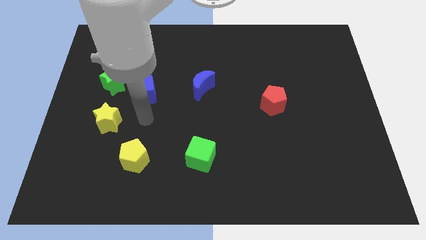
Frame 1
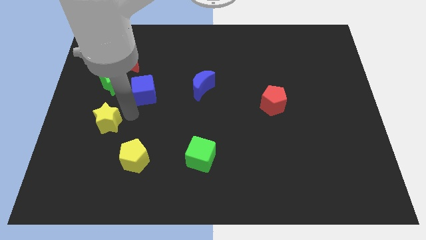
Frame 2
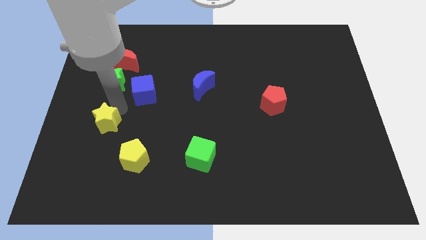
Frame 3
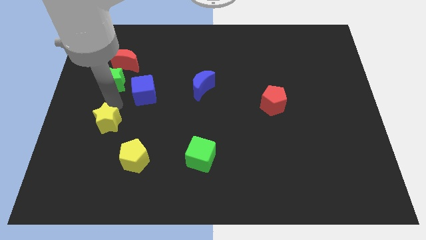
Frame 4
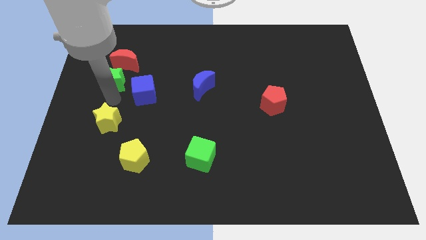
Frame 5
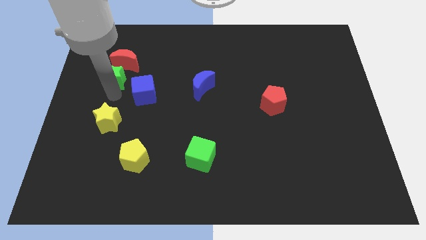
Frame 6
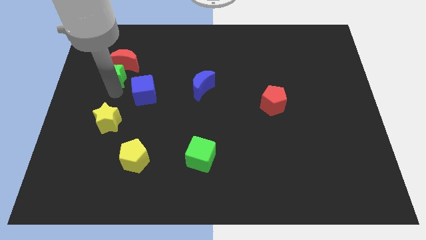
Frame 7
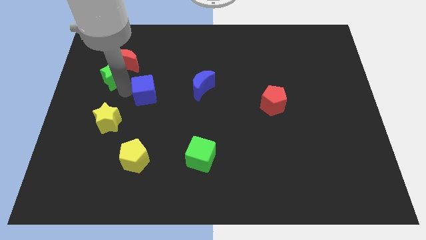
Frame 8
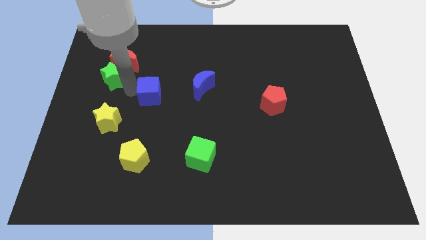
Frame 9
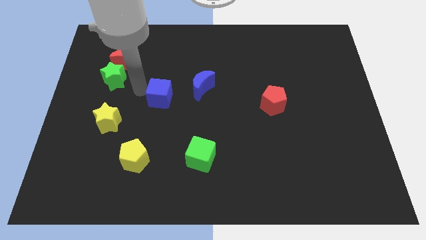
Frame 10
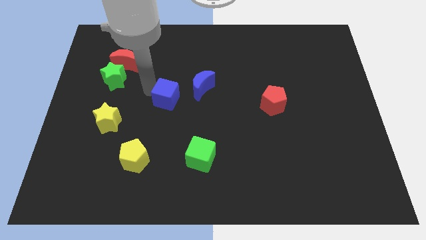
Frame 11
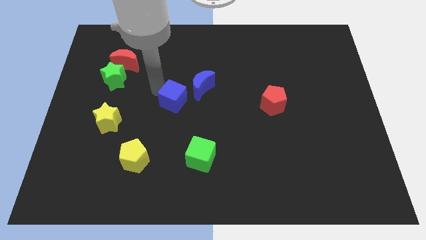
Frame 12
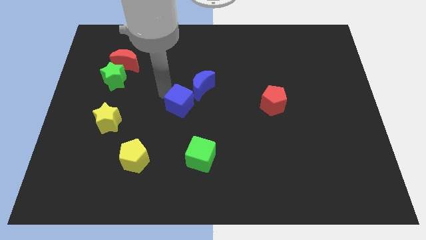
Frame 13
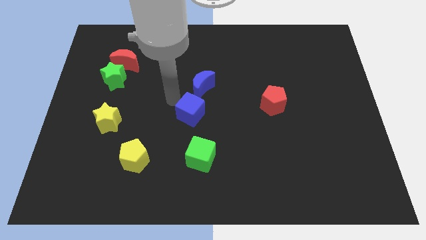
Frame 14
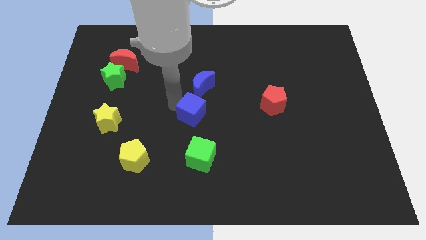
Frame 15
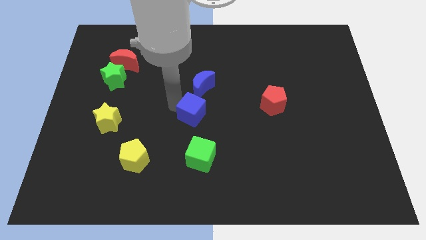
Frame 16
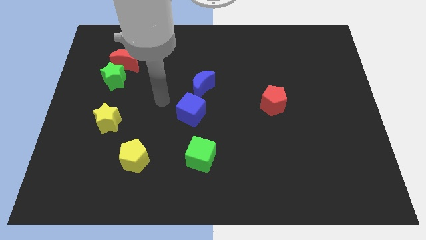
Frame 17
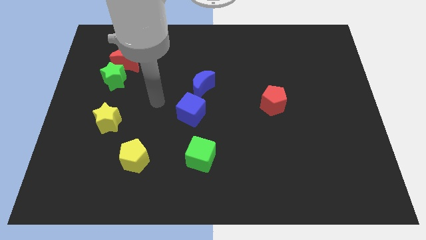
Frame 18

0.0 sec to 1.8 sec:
place the blue cube above the green cube

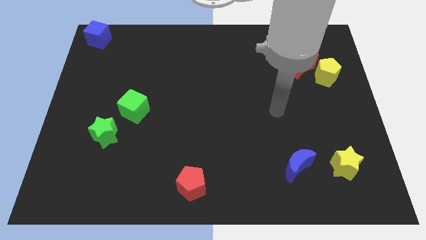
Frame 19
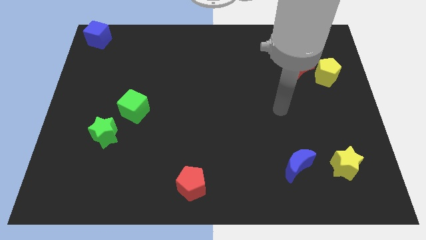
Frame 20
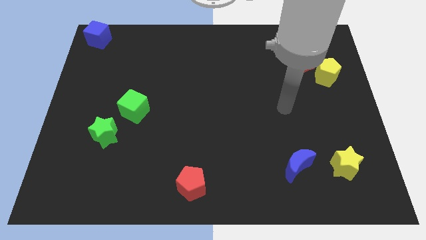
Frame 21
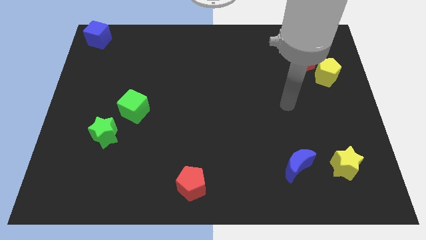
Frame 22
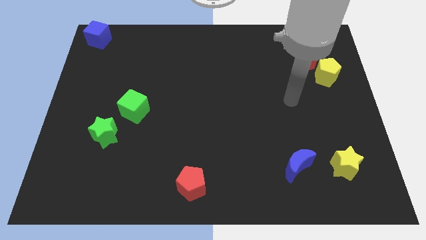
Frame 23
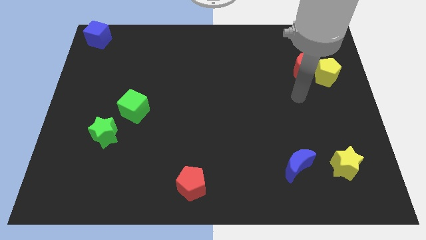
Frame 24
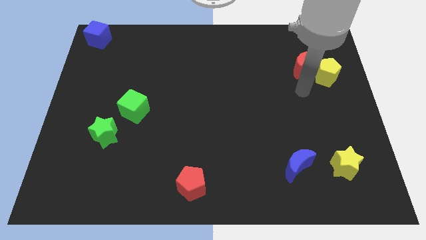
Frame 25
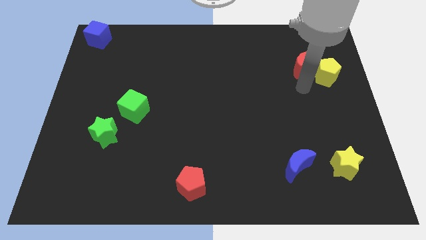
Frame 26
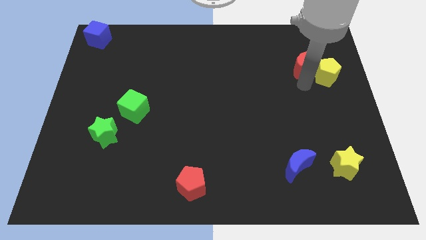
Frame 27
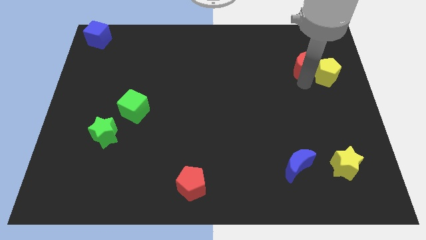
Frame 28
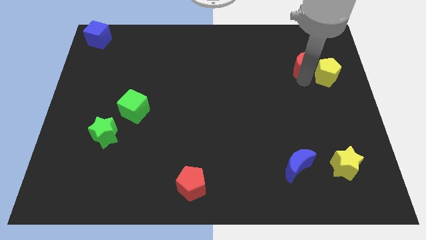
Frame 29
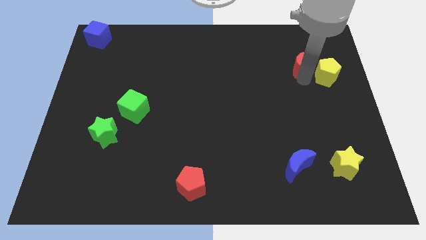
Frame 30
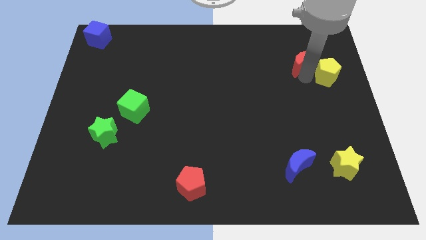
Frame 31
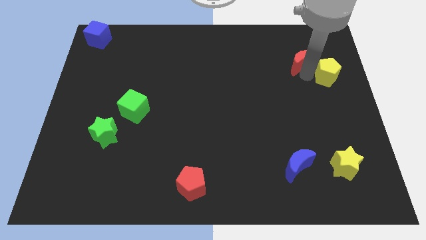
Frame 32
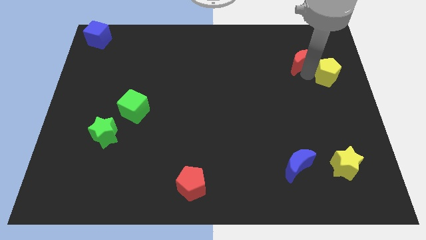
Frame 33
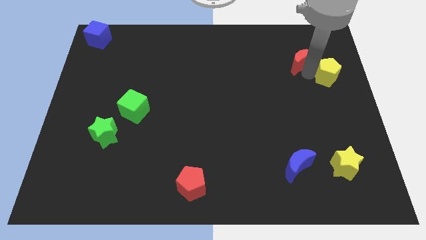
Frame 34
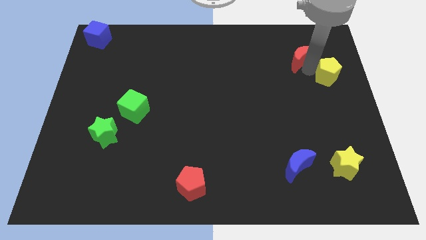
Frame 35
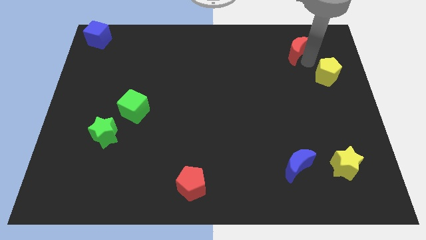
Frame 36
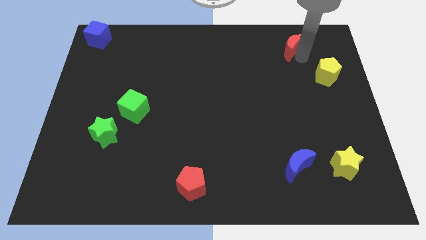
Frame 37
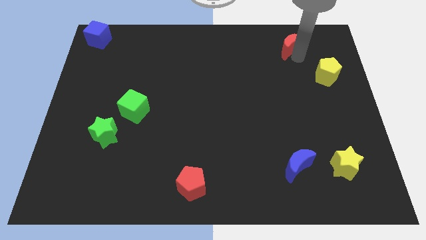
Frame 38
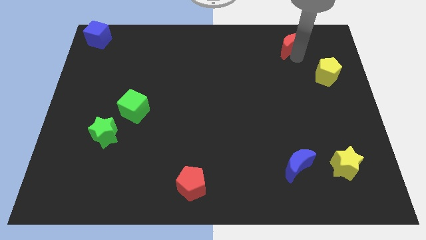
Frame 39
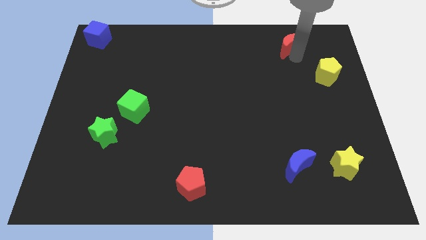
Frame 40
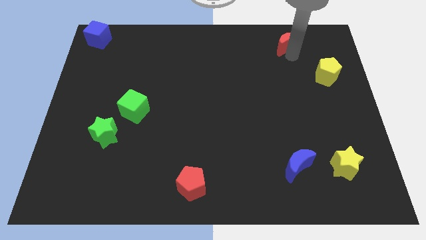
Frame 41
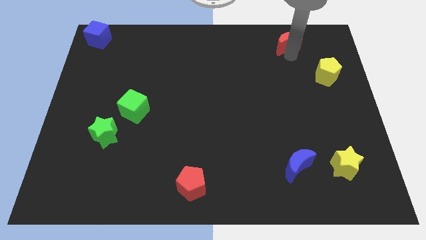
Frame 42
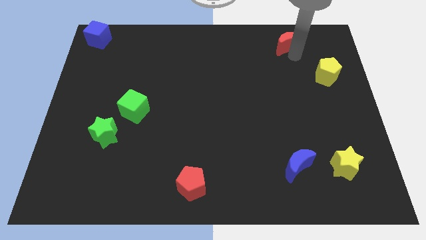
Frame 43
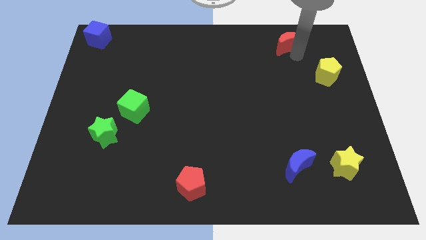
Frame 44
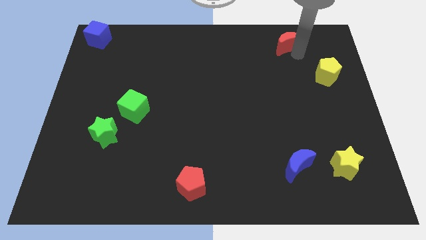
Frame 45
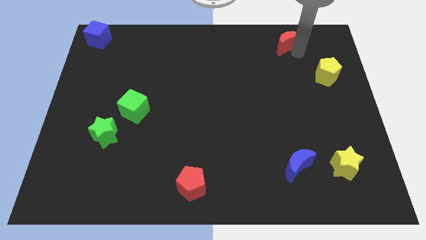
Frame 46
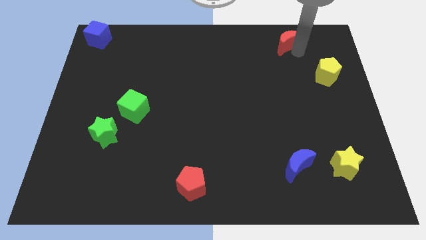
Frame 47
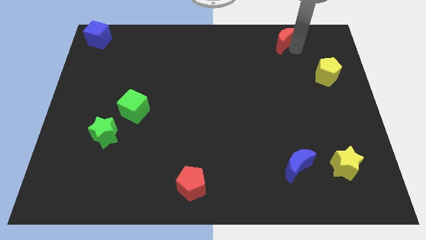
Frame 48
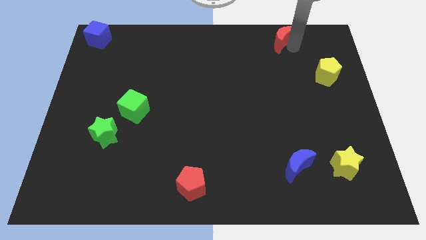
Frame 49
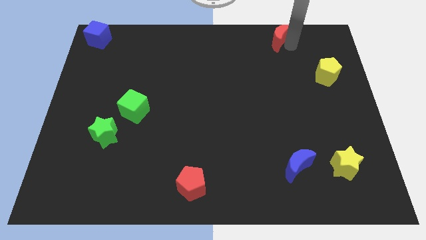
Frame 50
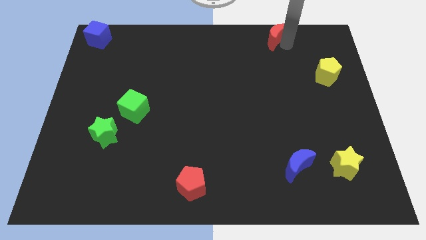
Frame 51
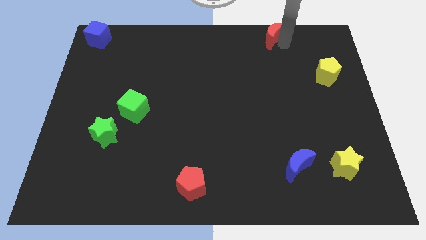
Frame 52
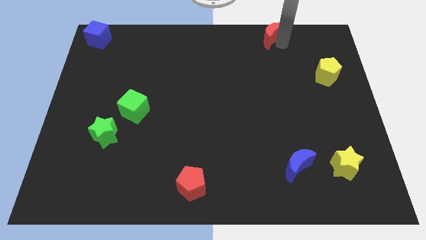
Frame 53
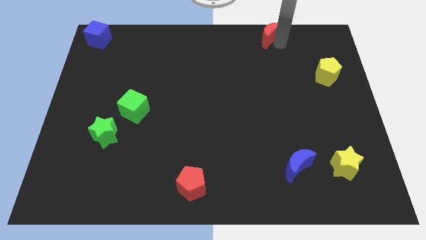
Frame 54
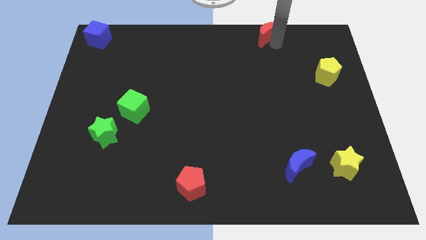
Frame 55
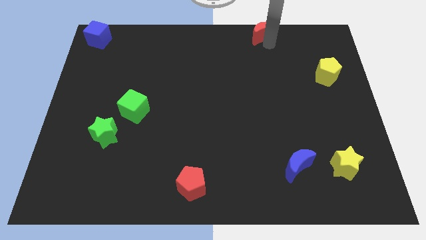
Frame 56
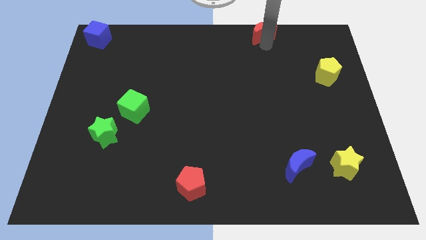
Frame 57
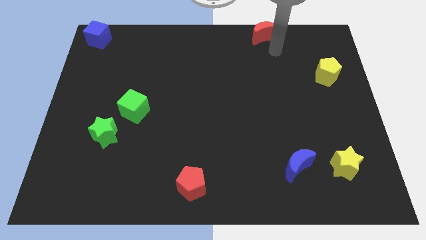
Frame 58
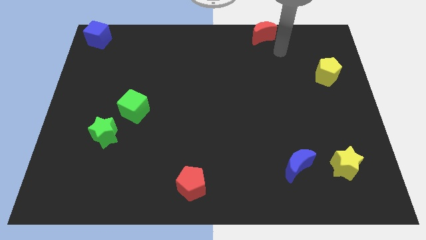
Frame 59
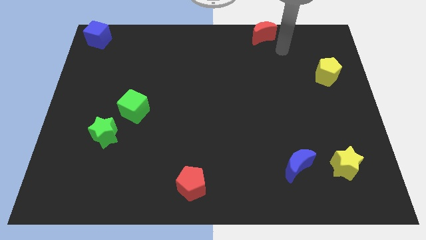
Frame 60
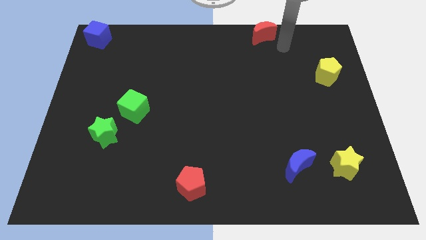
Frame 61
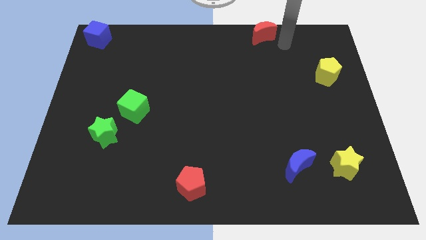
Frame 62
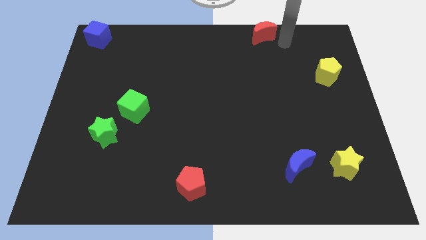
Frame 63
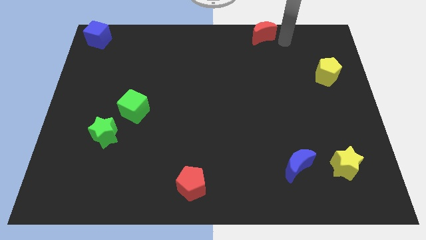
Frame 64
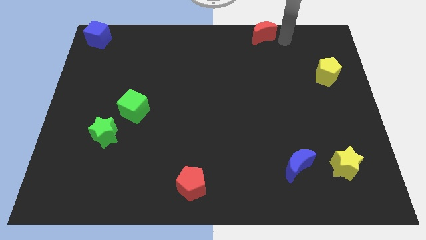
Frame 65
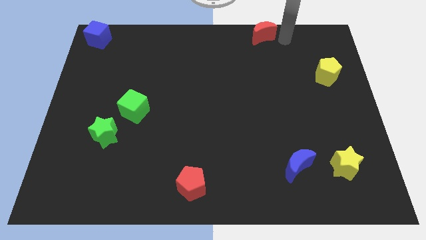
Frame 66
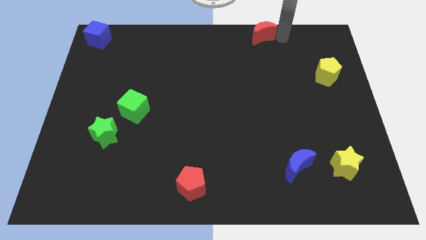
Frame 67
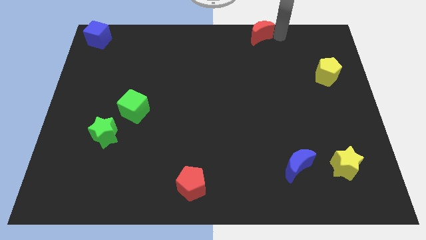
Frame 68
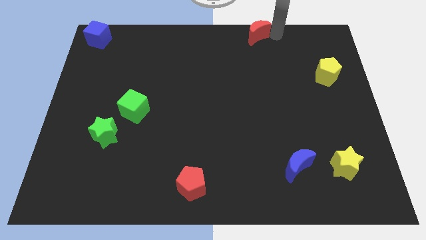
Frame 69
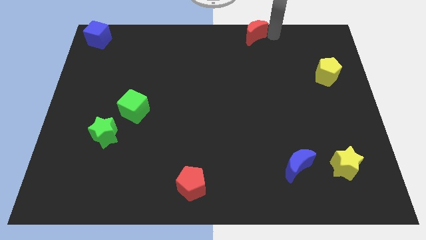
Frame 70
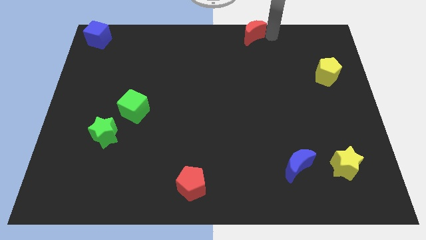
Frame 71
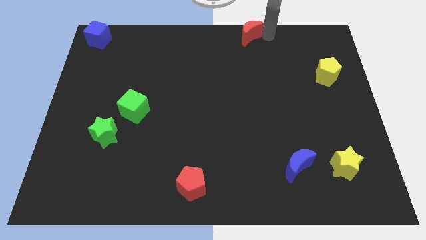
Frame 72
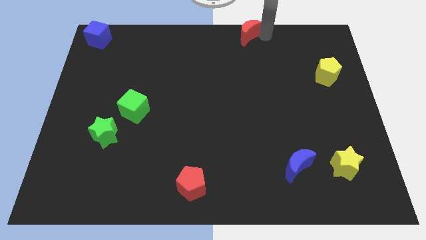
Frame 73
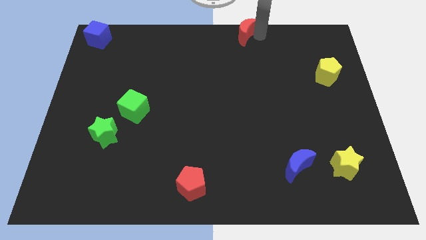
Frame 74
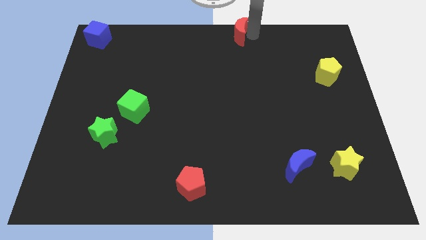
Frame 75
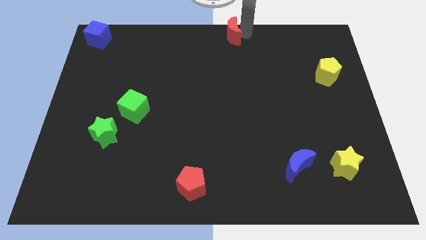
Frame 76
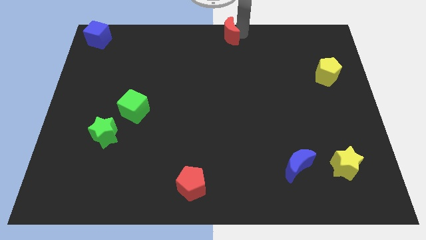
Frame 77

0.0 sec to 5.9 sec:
separate red moon from the yellow pentagon

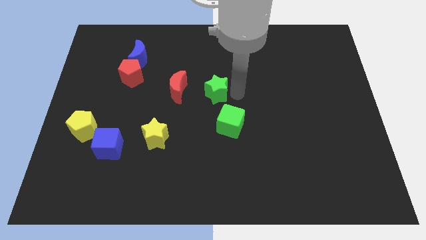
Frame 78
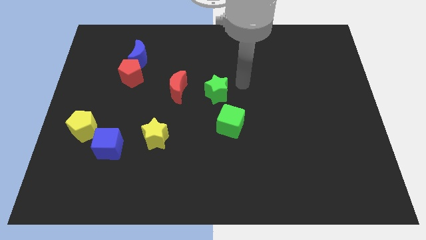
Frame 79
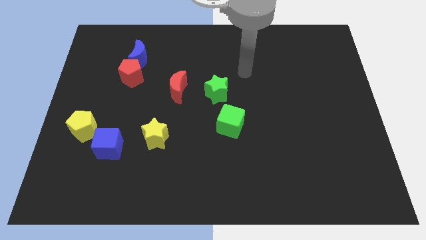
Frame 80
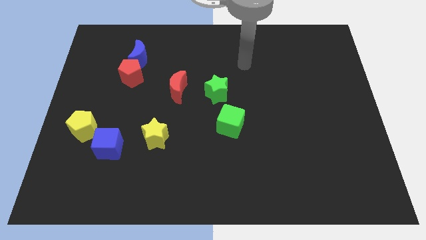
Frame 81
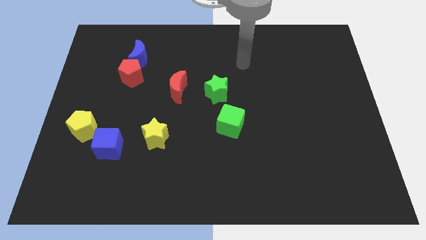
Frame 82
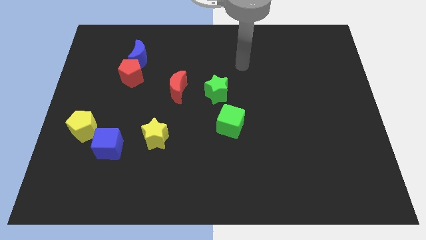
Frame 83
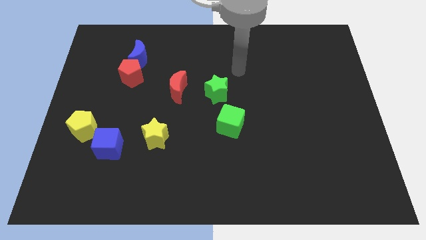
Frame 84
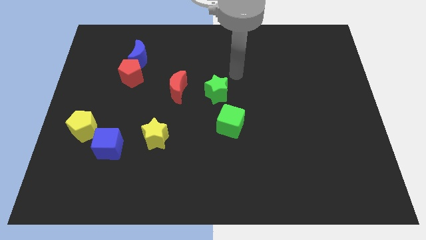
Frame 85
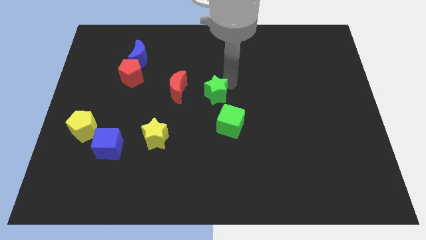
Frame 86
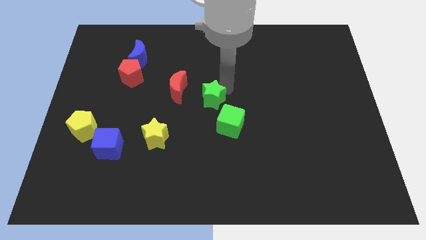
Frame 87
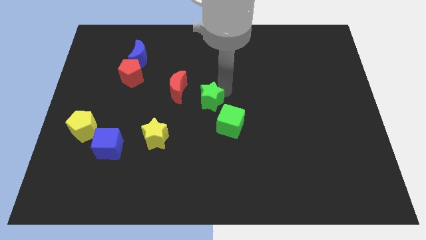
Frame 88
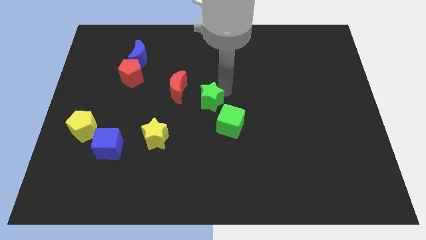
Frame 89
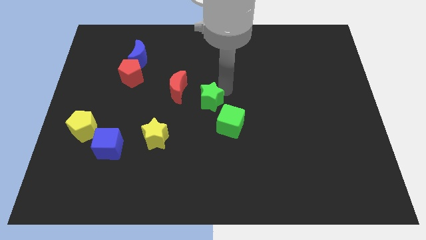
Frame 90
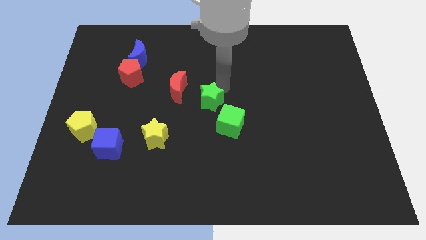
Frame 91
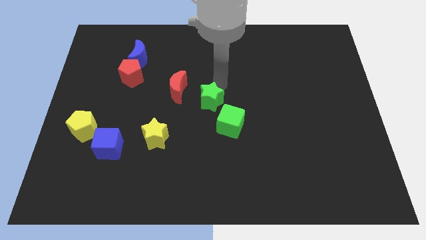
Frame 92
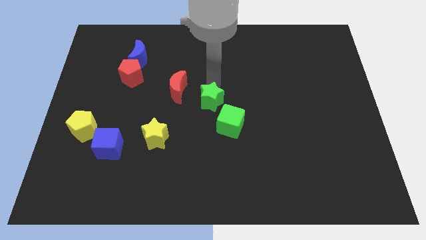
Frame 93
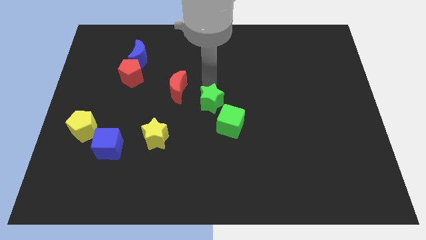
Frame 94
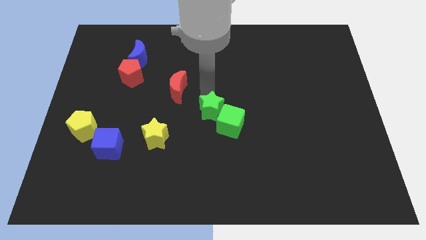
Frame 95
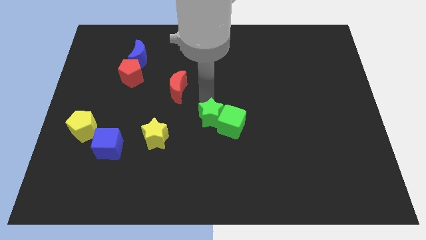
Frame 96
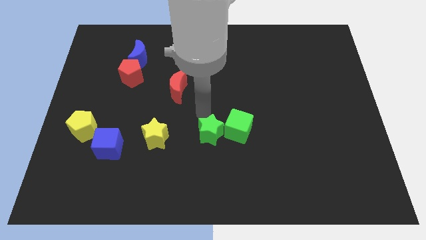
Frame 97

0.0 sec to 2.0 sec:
move the green star to the left of the green cube
